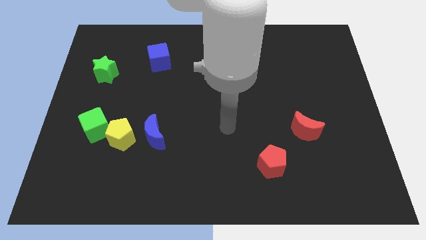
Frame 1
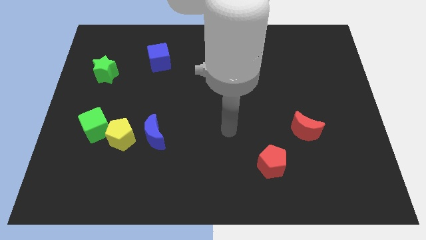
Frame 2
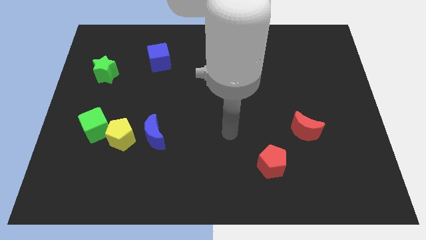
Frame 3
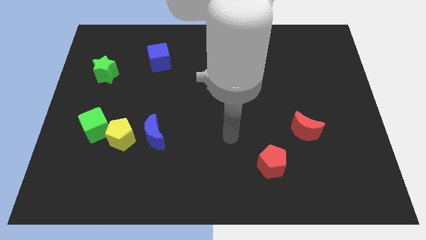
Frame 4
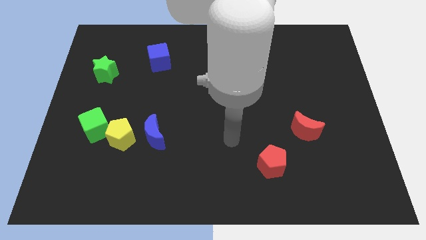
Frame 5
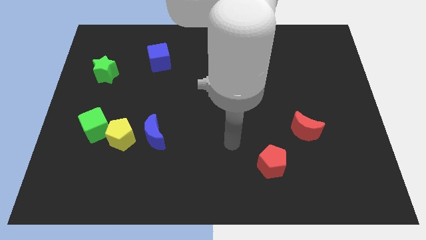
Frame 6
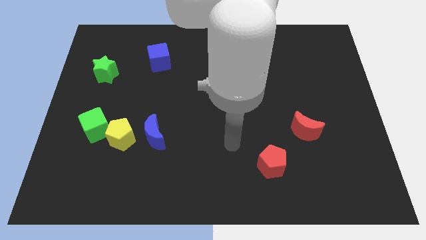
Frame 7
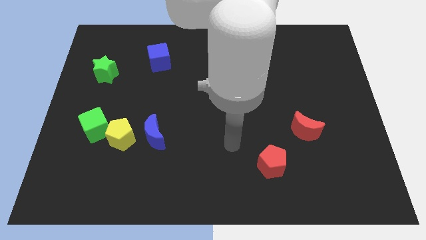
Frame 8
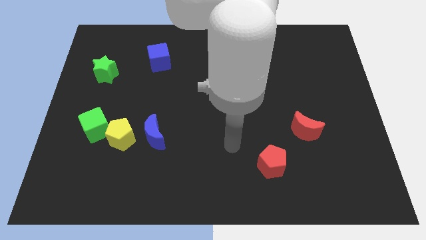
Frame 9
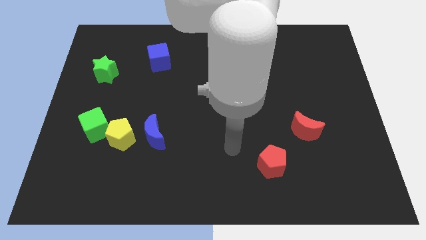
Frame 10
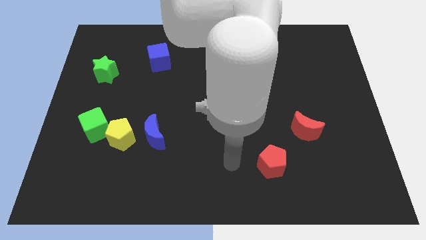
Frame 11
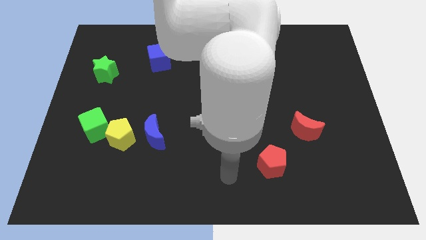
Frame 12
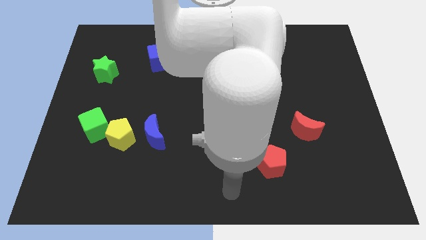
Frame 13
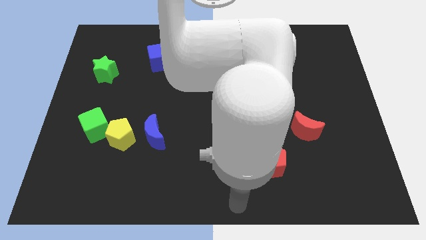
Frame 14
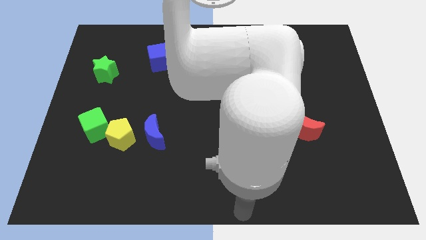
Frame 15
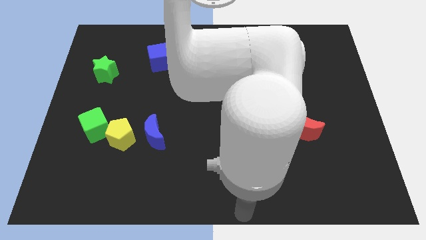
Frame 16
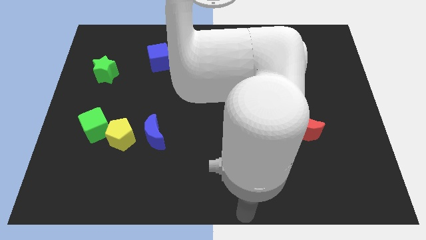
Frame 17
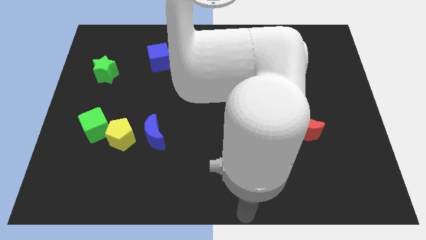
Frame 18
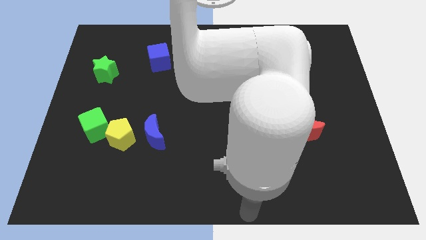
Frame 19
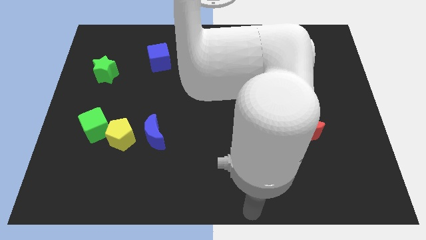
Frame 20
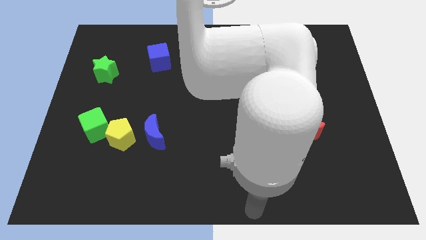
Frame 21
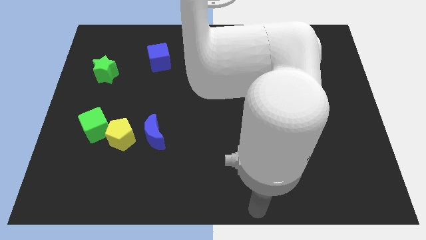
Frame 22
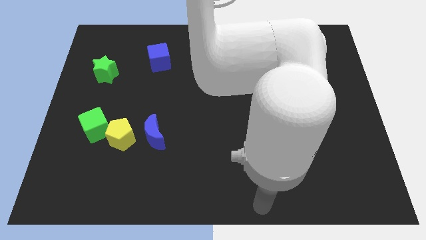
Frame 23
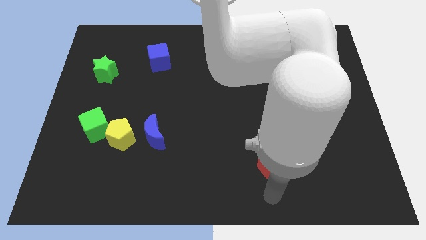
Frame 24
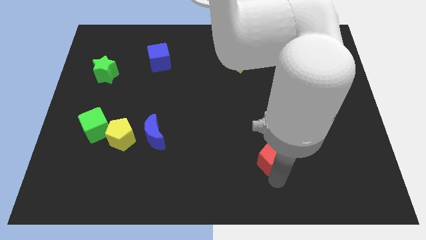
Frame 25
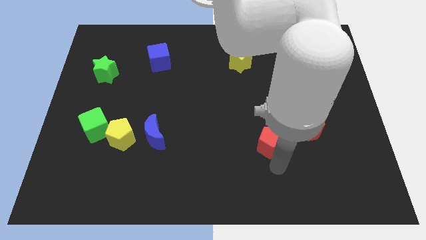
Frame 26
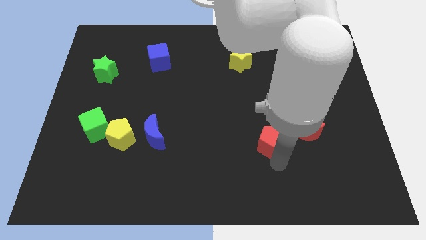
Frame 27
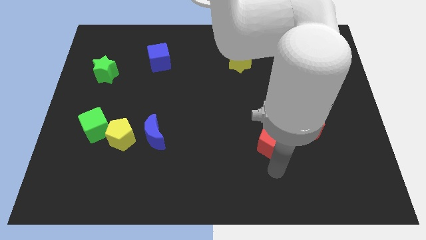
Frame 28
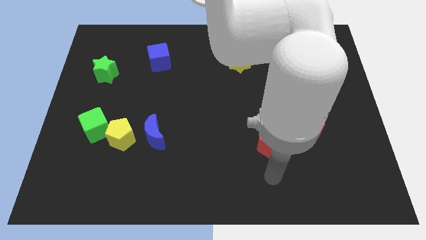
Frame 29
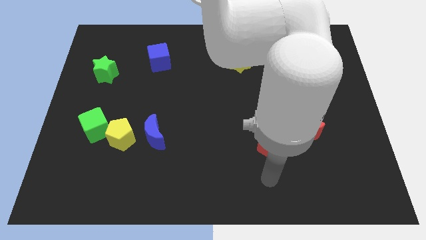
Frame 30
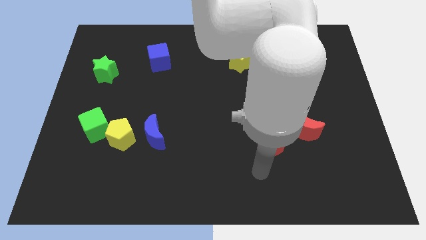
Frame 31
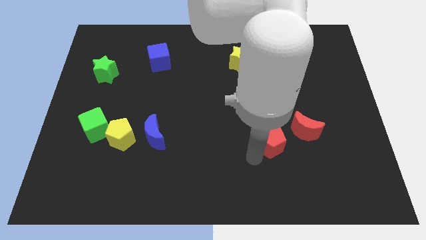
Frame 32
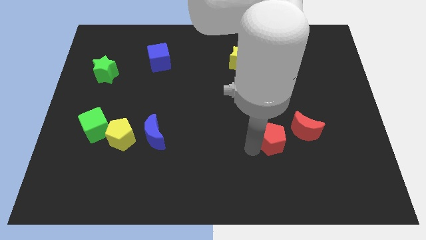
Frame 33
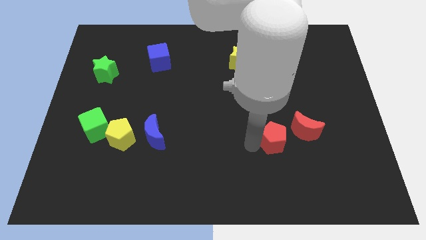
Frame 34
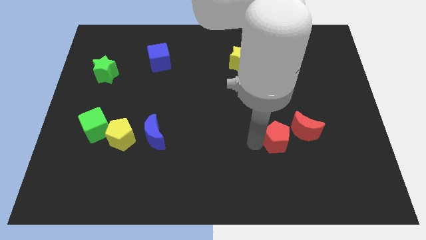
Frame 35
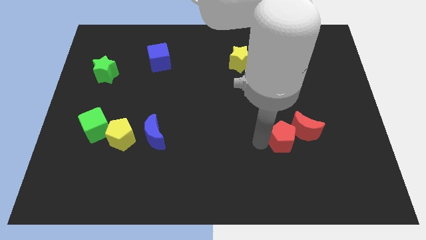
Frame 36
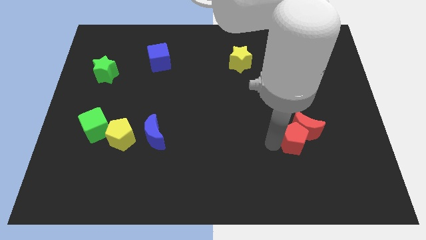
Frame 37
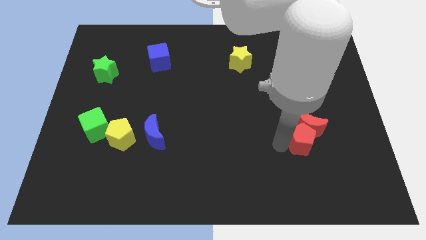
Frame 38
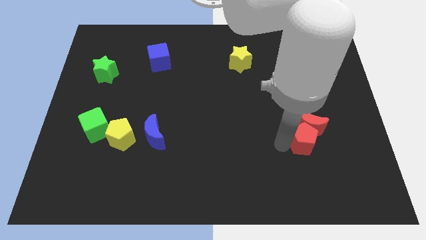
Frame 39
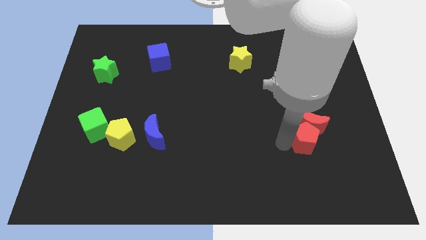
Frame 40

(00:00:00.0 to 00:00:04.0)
move red pentagon into the red moon

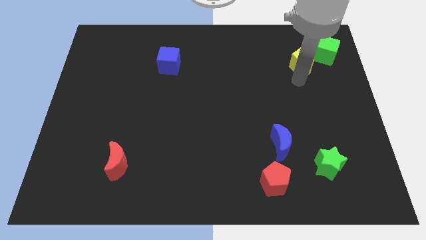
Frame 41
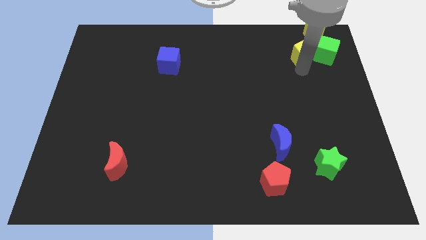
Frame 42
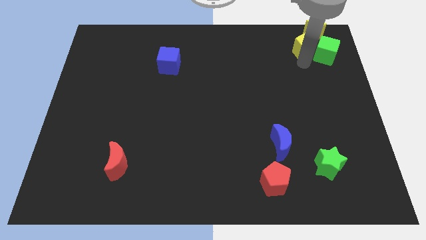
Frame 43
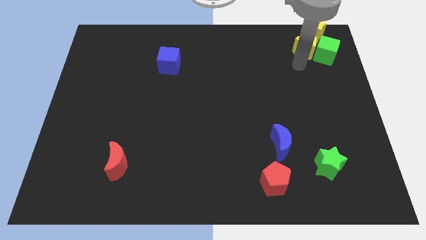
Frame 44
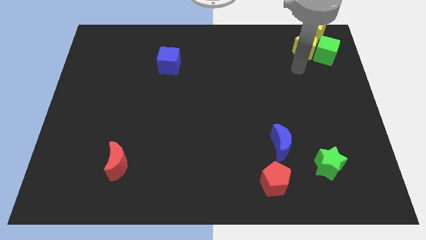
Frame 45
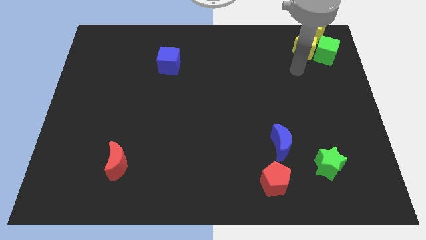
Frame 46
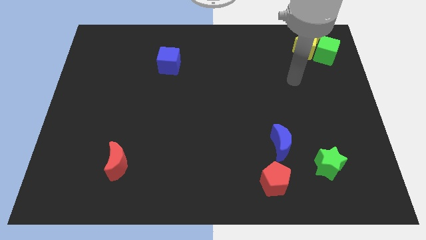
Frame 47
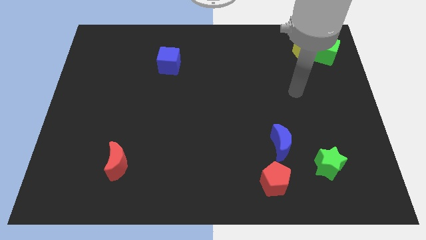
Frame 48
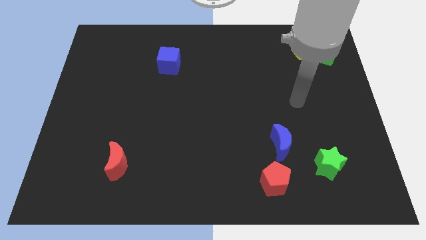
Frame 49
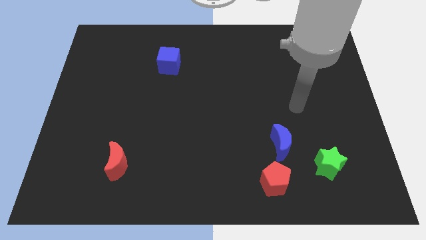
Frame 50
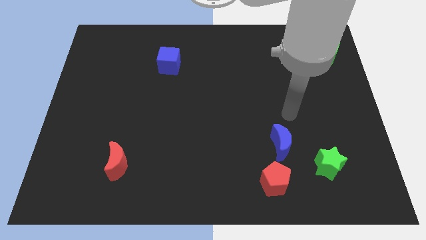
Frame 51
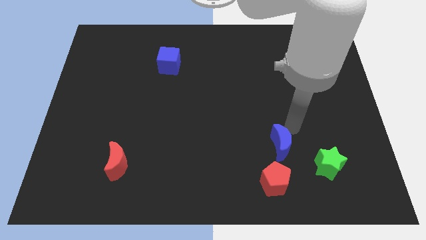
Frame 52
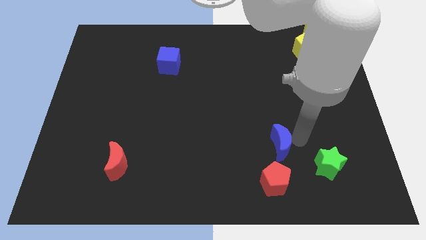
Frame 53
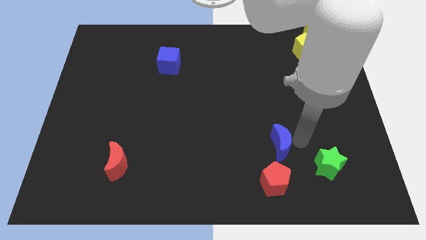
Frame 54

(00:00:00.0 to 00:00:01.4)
place yellow pentagon to the left side of the green cube

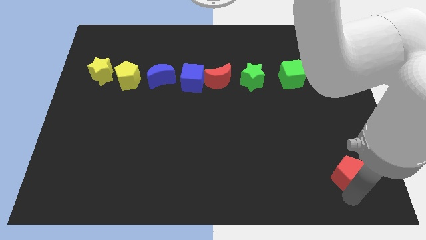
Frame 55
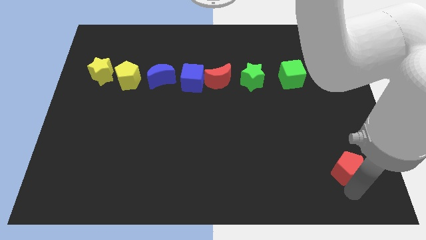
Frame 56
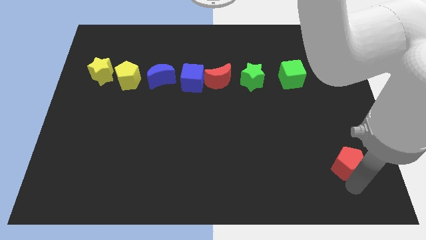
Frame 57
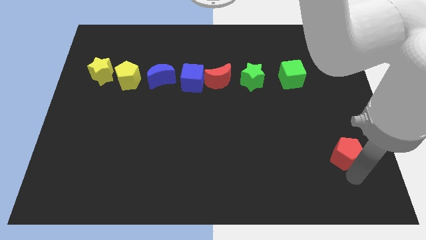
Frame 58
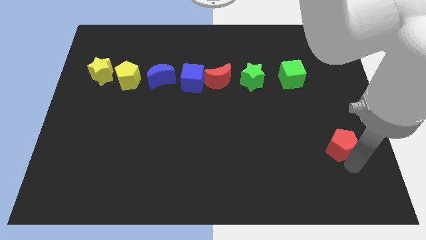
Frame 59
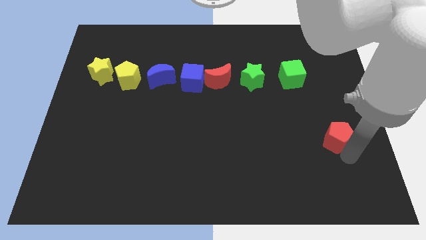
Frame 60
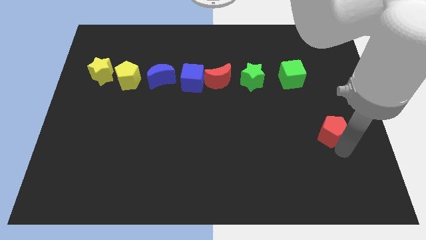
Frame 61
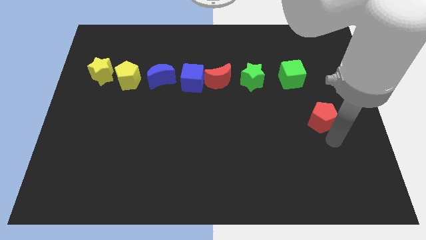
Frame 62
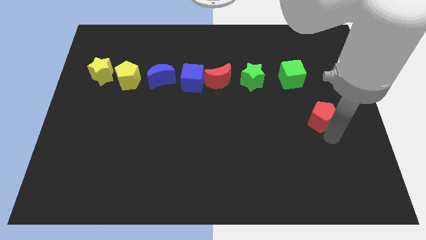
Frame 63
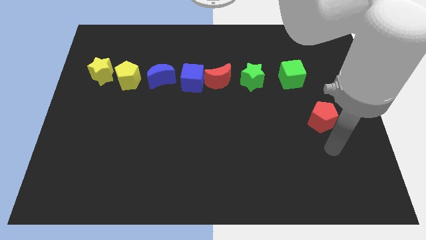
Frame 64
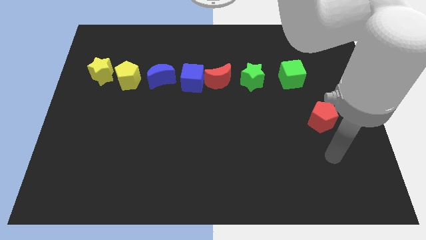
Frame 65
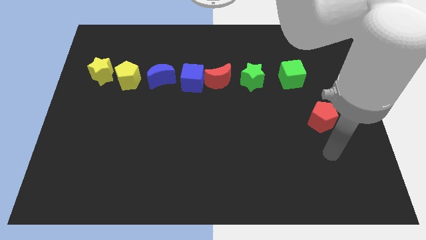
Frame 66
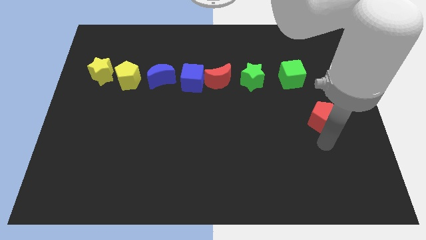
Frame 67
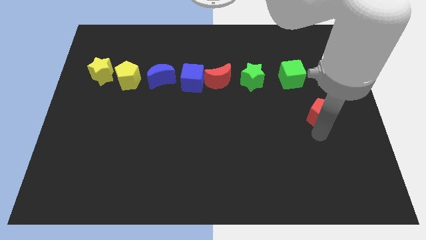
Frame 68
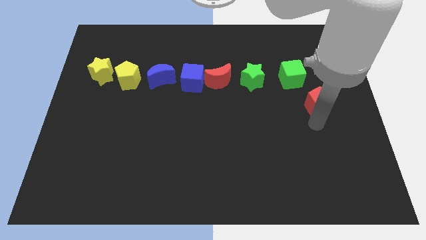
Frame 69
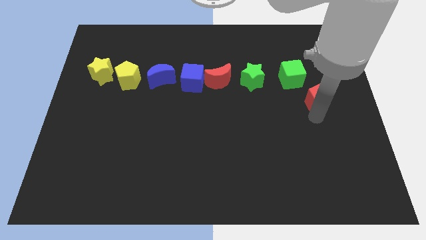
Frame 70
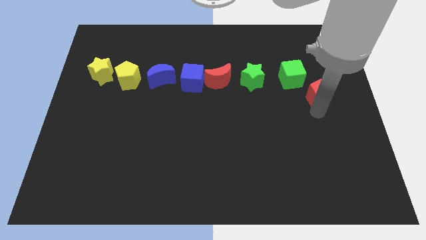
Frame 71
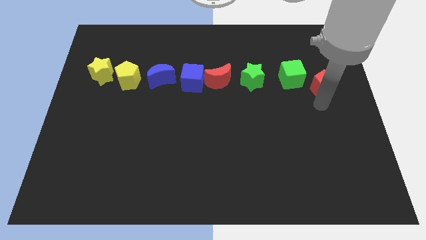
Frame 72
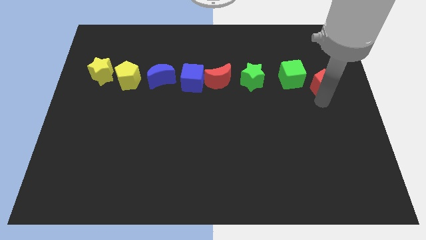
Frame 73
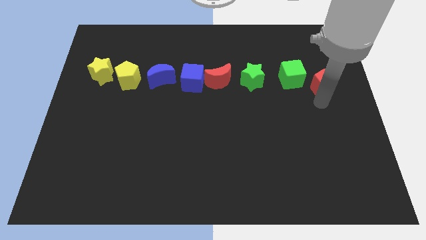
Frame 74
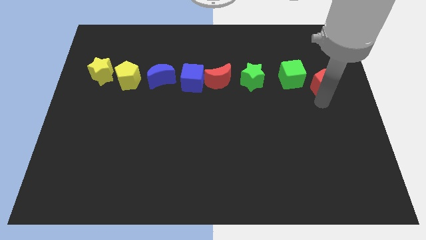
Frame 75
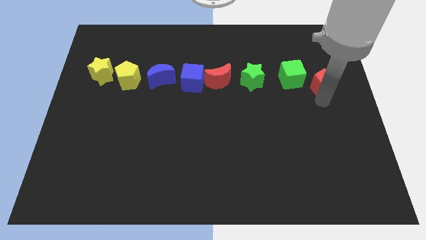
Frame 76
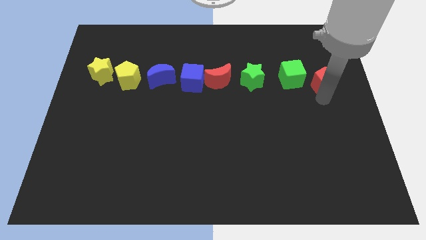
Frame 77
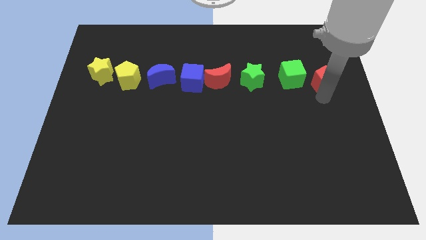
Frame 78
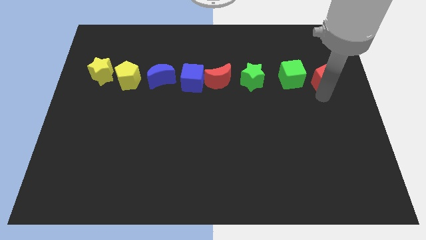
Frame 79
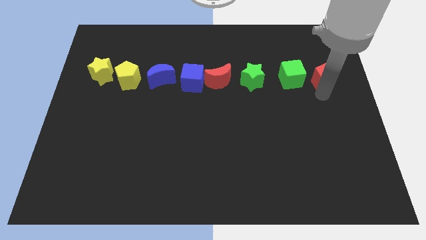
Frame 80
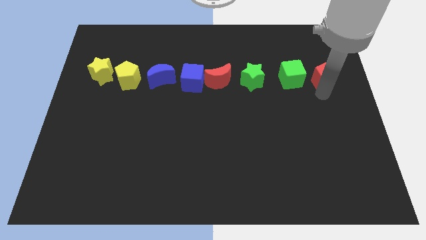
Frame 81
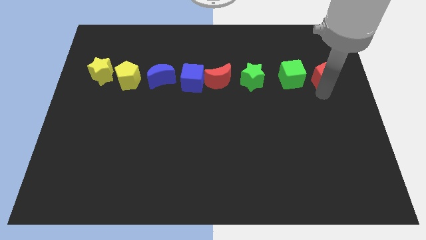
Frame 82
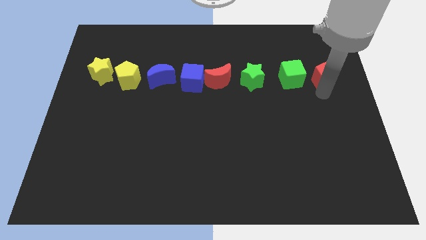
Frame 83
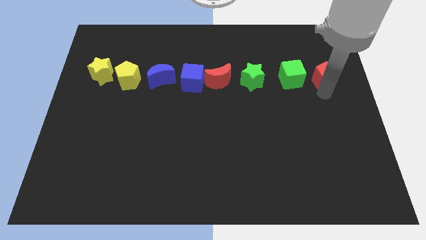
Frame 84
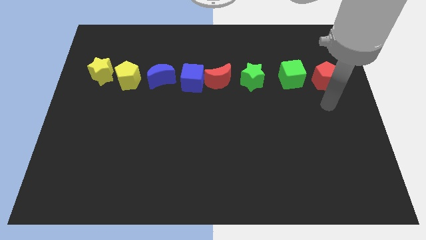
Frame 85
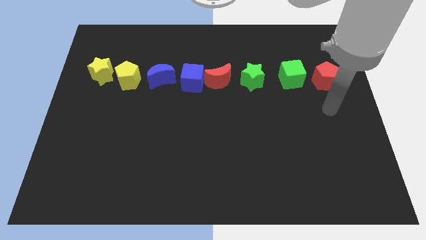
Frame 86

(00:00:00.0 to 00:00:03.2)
place red pentagon beside green cube

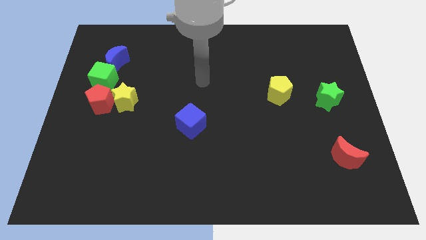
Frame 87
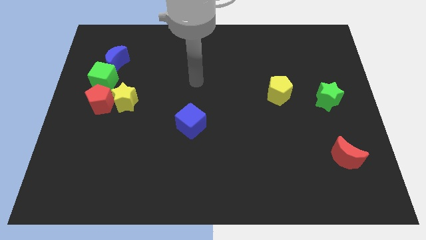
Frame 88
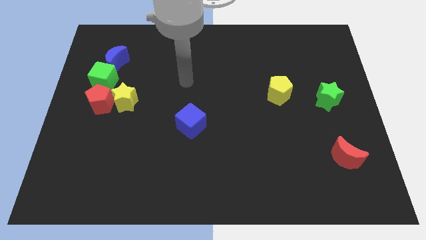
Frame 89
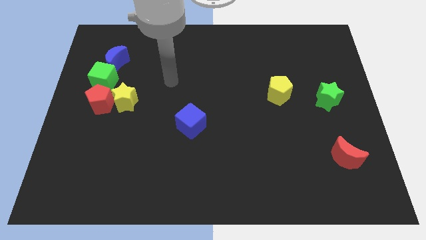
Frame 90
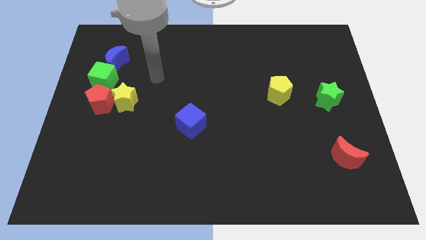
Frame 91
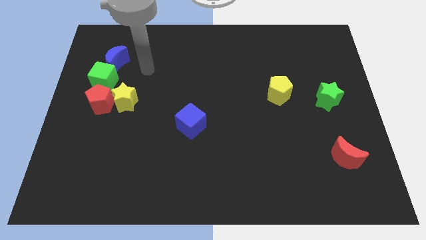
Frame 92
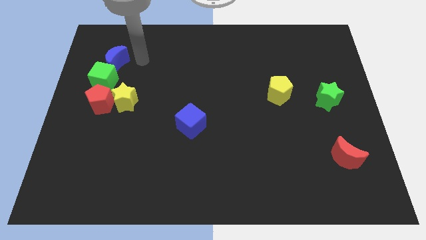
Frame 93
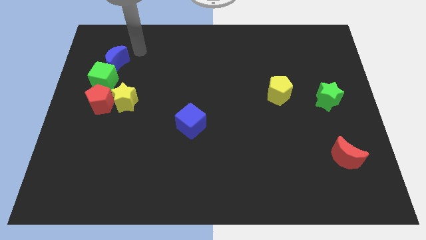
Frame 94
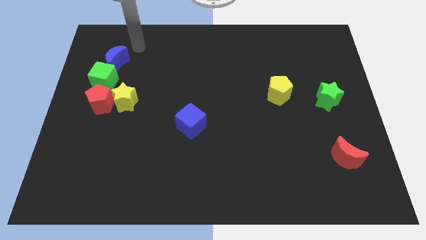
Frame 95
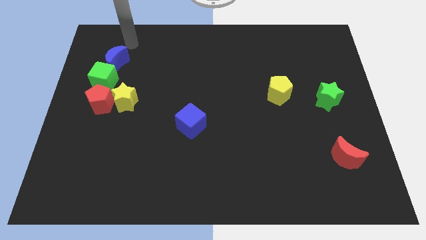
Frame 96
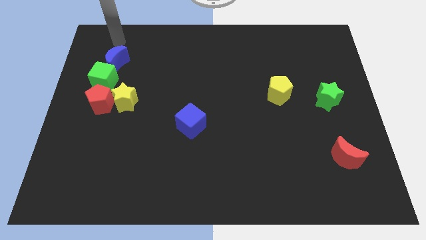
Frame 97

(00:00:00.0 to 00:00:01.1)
point your hand above the blue crescent
